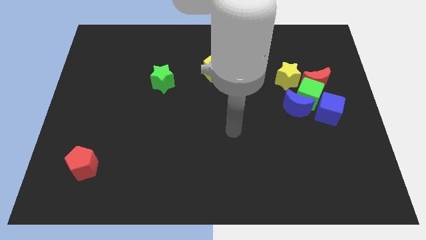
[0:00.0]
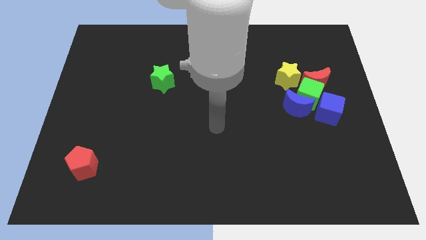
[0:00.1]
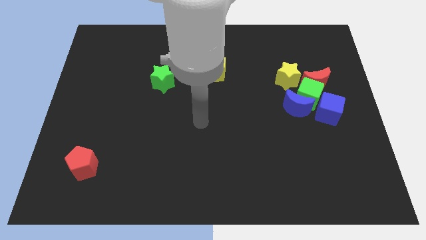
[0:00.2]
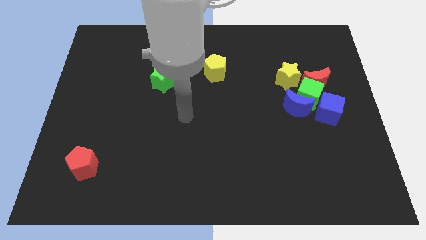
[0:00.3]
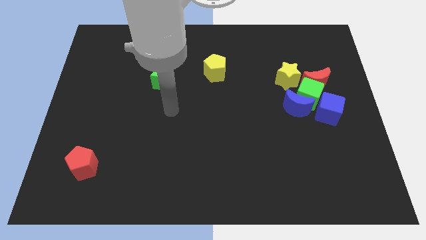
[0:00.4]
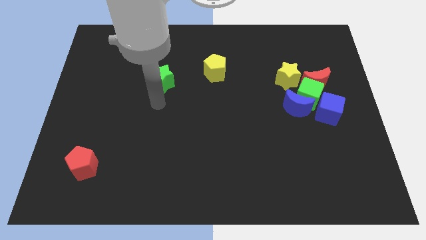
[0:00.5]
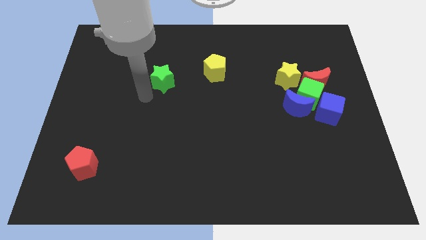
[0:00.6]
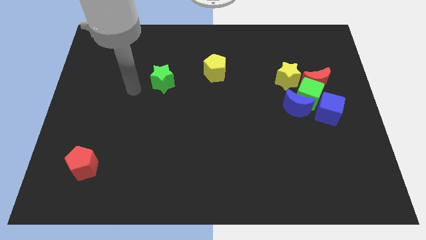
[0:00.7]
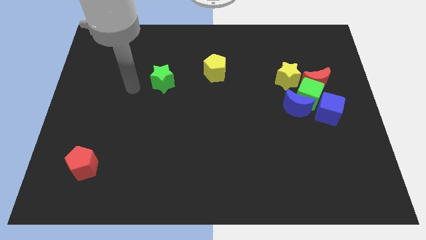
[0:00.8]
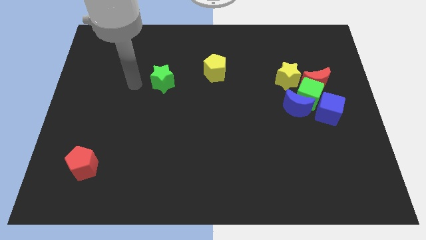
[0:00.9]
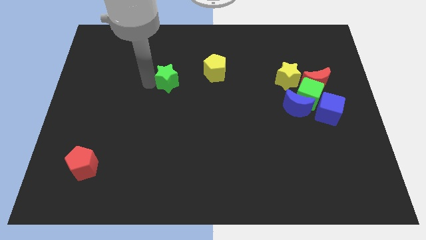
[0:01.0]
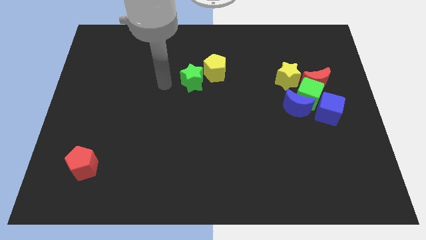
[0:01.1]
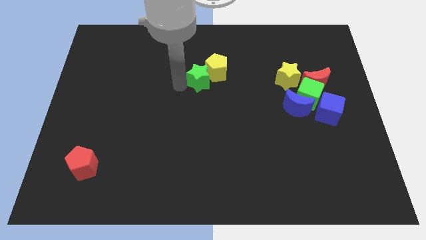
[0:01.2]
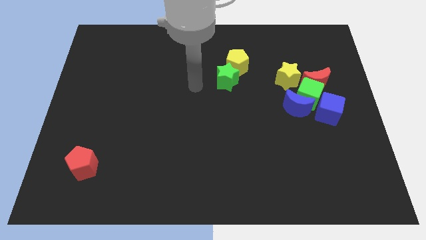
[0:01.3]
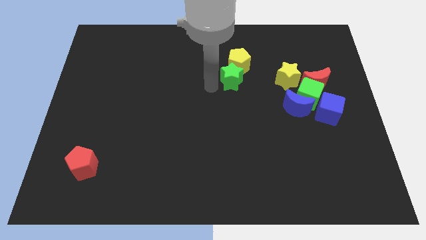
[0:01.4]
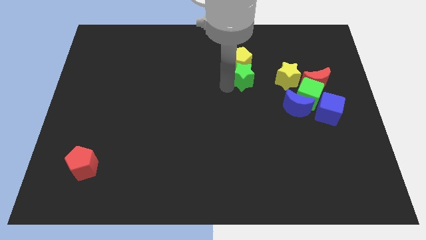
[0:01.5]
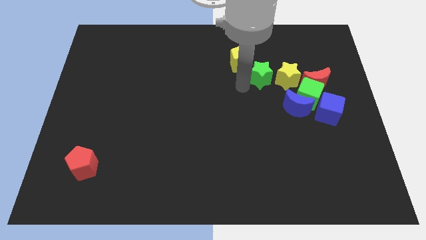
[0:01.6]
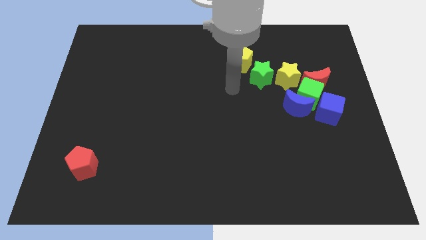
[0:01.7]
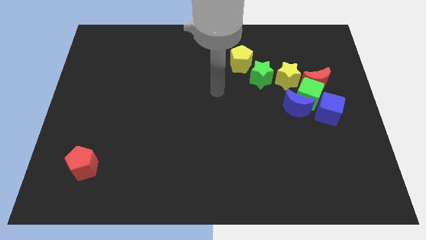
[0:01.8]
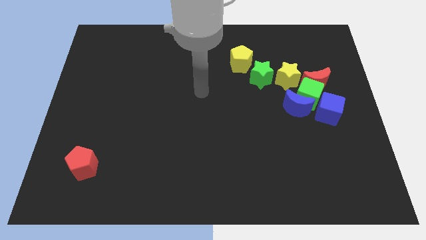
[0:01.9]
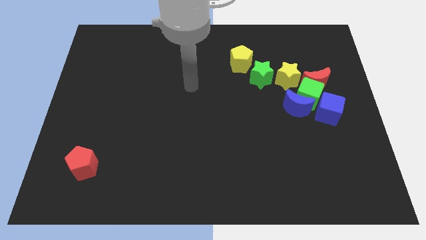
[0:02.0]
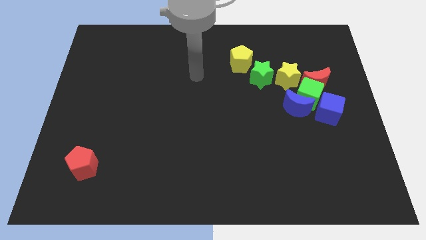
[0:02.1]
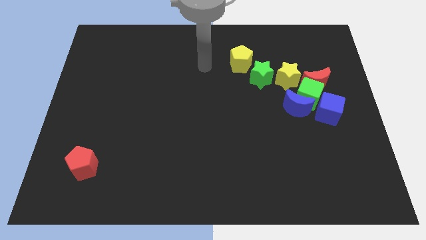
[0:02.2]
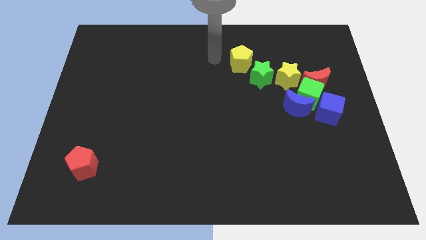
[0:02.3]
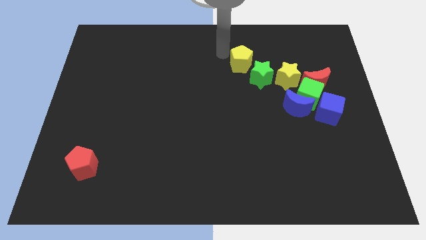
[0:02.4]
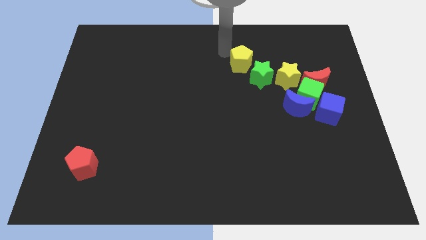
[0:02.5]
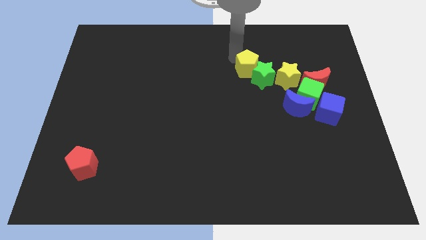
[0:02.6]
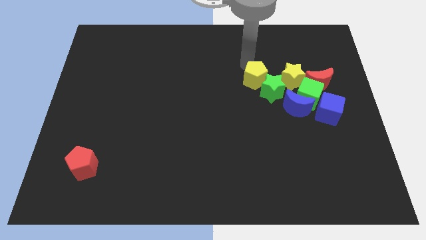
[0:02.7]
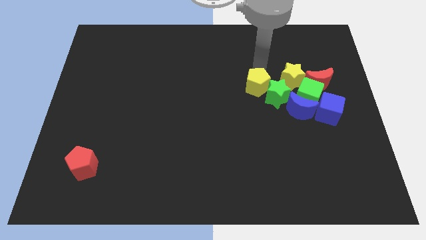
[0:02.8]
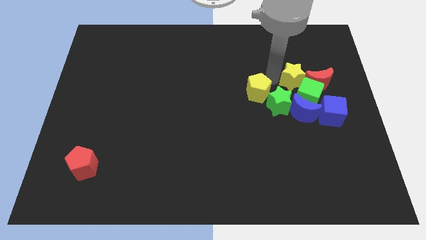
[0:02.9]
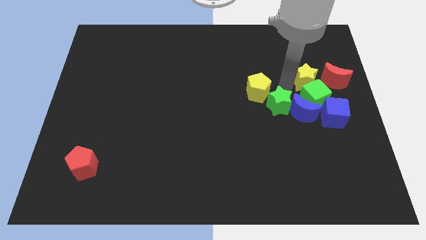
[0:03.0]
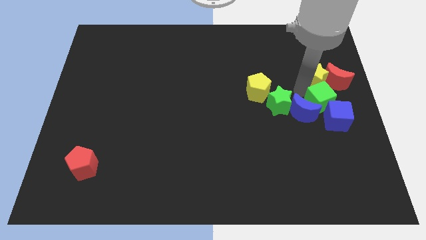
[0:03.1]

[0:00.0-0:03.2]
push green star and the yellow pentagon towards the center right

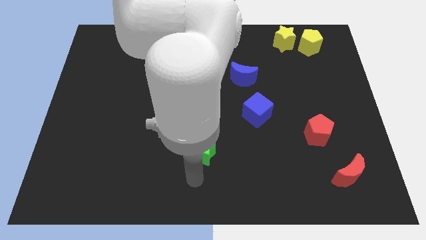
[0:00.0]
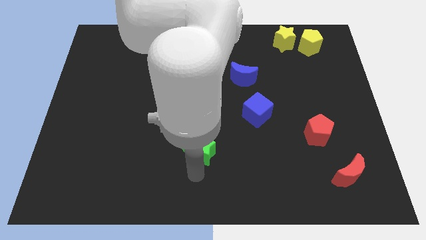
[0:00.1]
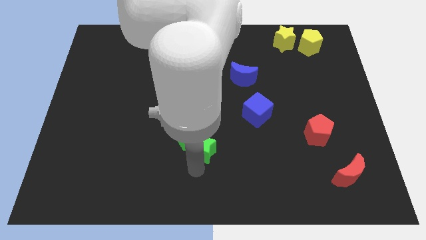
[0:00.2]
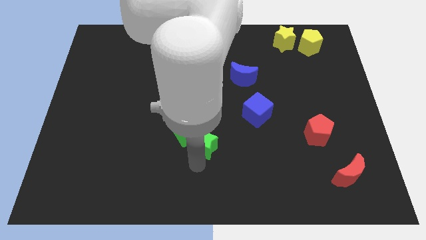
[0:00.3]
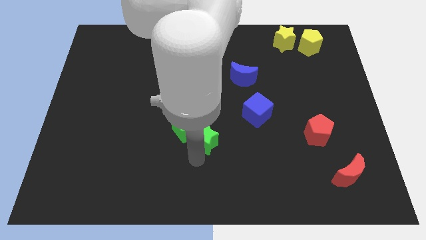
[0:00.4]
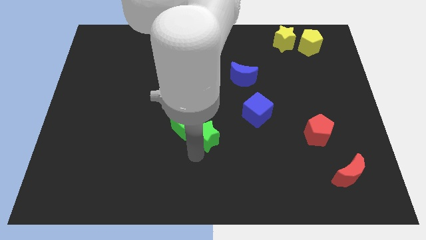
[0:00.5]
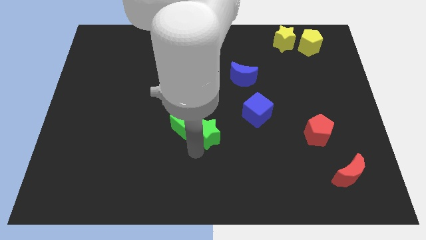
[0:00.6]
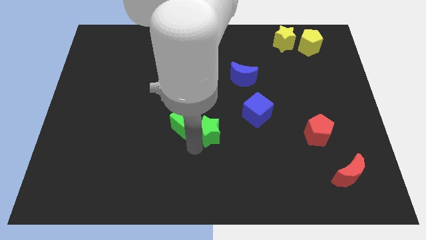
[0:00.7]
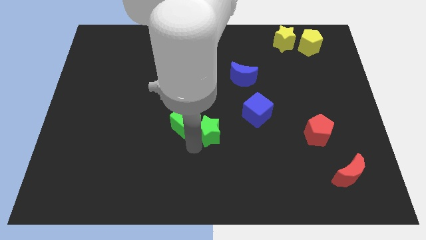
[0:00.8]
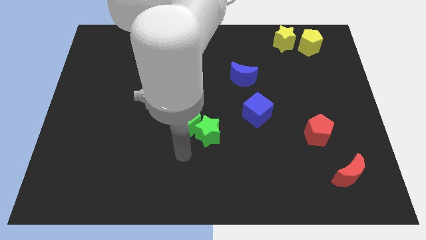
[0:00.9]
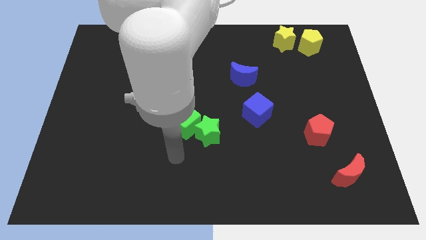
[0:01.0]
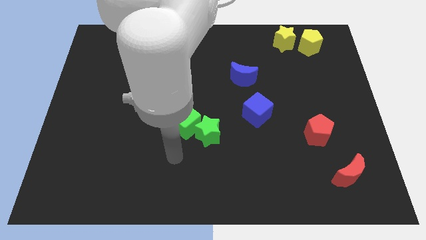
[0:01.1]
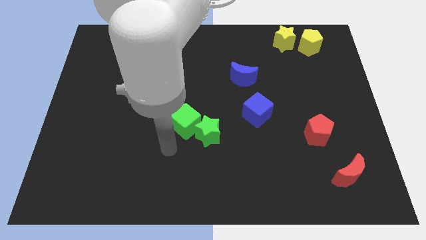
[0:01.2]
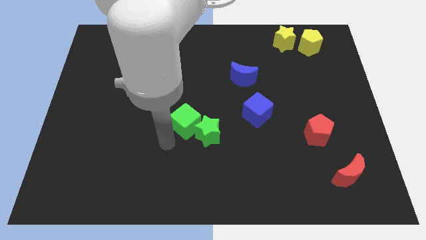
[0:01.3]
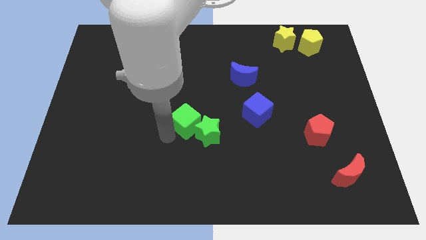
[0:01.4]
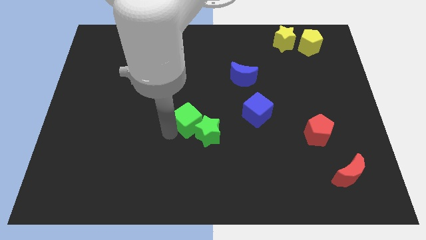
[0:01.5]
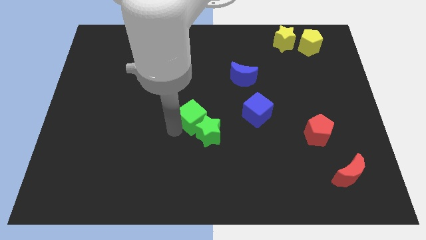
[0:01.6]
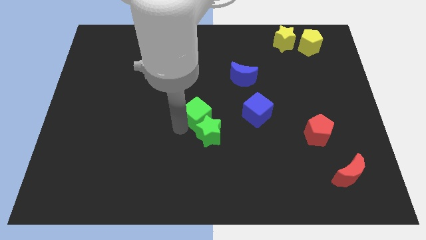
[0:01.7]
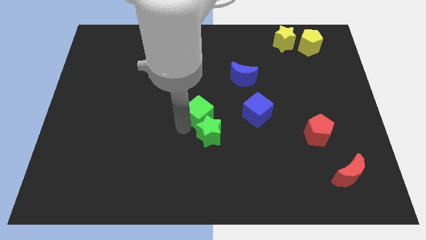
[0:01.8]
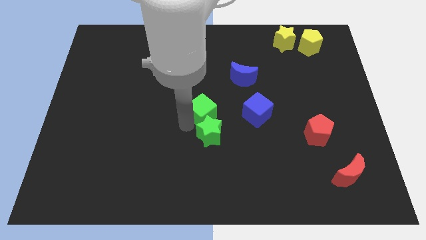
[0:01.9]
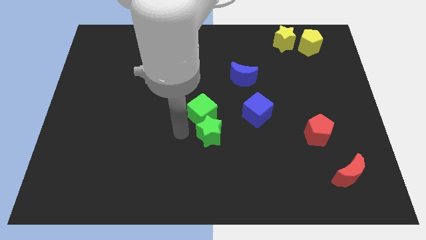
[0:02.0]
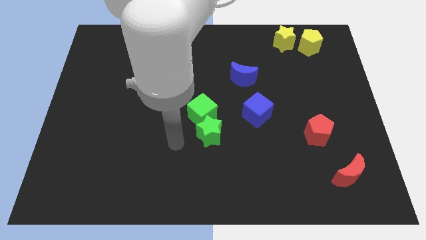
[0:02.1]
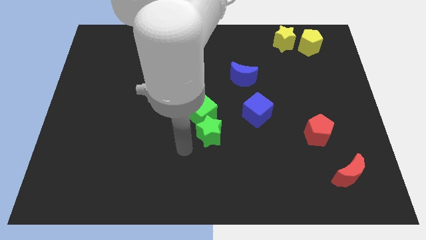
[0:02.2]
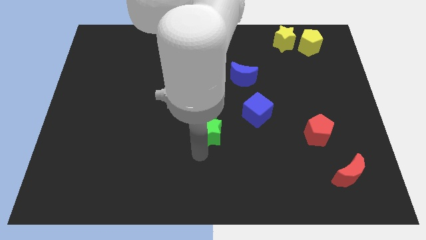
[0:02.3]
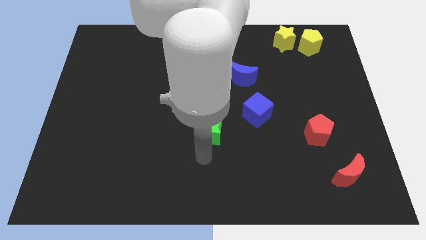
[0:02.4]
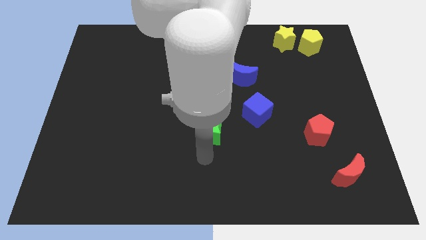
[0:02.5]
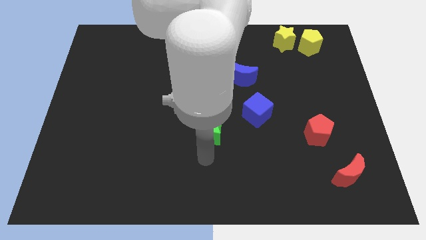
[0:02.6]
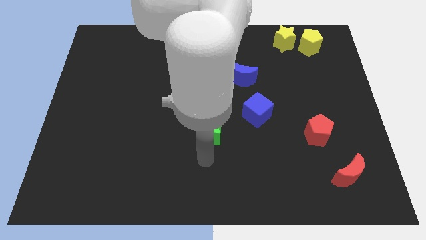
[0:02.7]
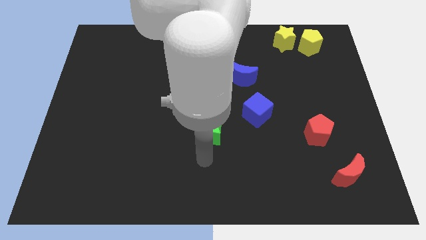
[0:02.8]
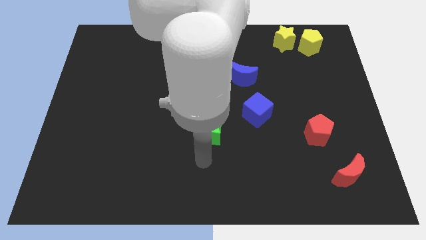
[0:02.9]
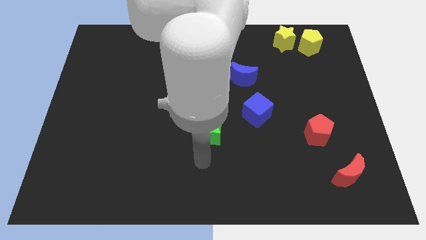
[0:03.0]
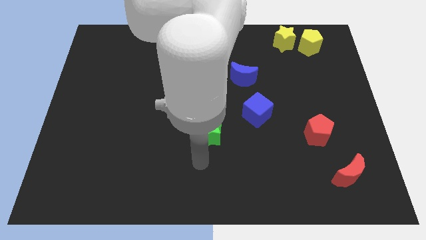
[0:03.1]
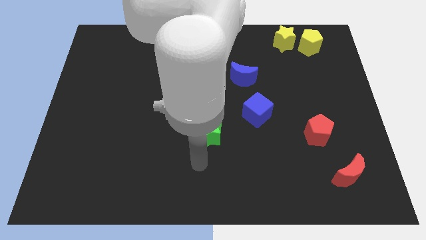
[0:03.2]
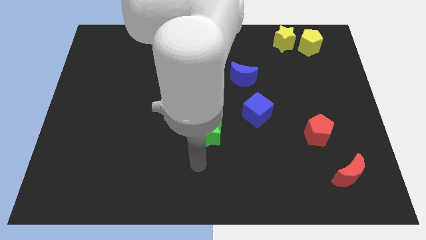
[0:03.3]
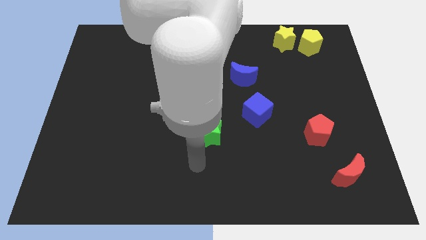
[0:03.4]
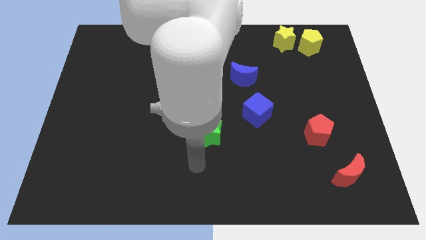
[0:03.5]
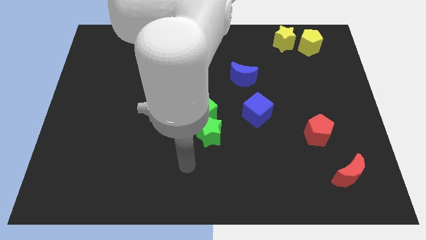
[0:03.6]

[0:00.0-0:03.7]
place the green blocks left to the blue cube

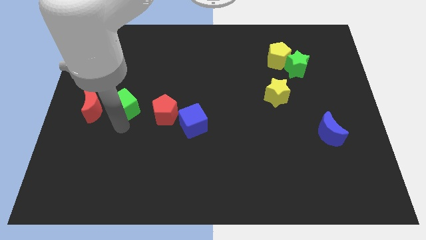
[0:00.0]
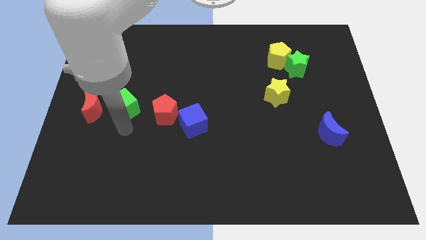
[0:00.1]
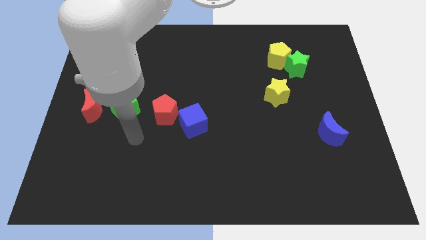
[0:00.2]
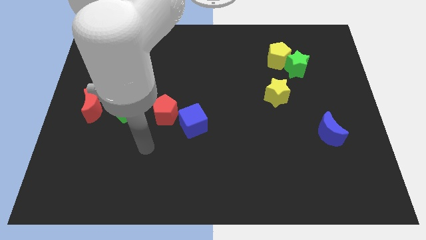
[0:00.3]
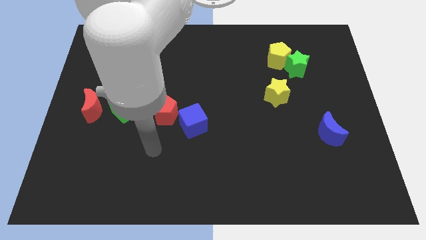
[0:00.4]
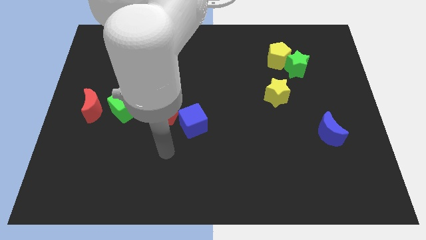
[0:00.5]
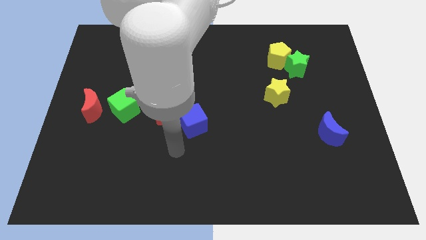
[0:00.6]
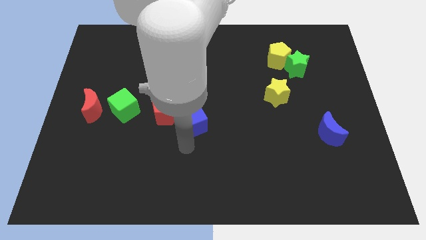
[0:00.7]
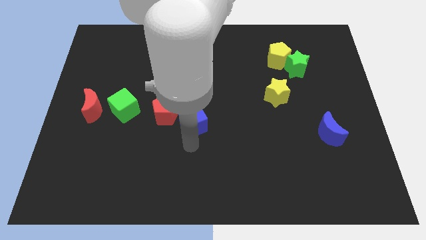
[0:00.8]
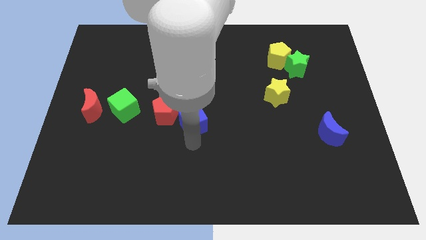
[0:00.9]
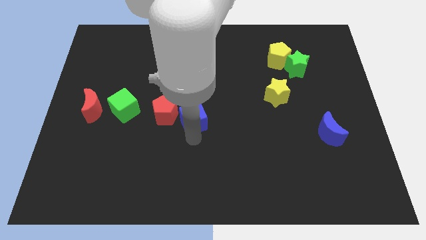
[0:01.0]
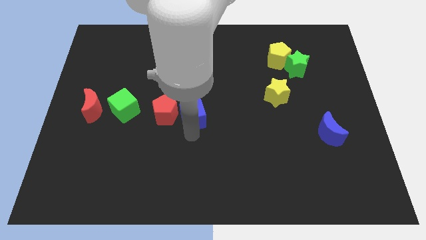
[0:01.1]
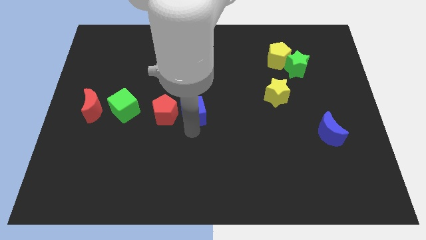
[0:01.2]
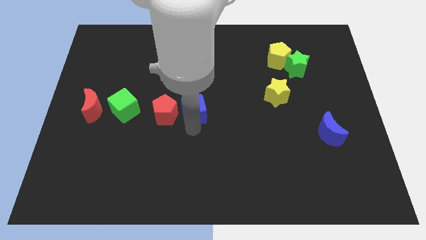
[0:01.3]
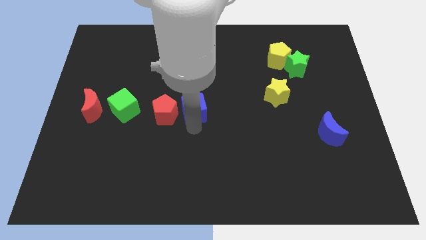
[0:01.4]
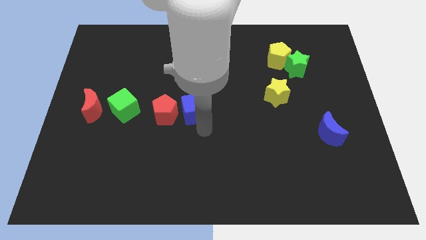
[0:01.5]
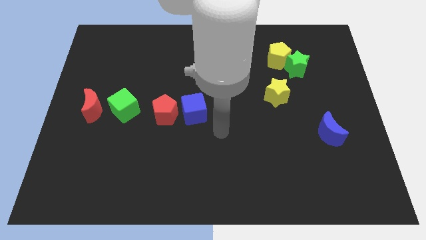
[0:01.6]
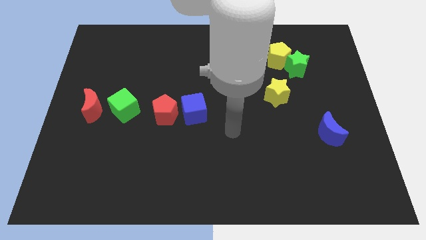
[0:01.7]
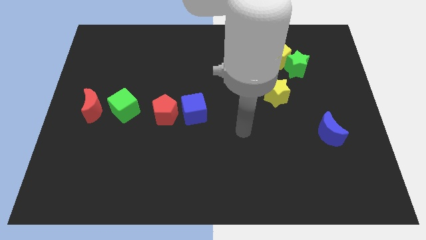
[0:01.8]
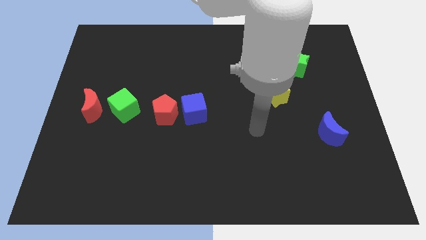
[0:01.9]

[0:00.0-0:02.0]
move the blue cube to the right of the red pentagon
